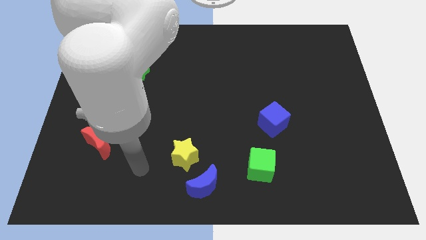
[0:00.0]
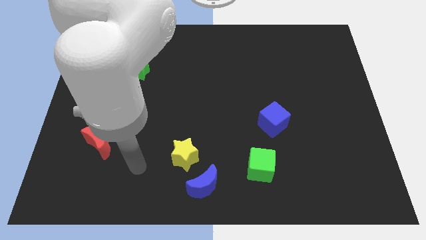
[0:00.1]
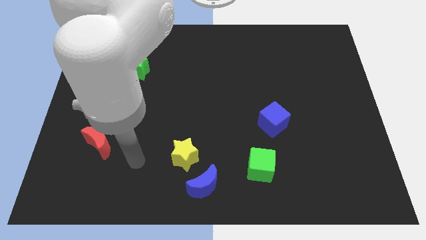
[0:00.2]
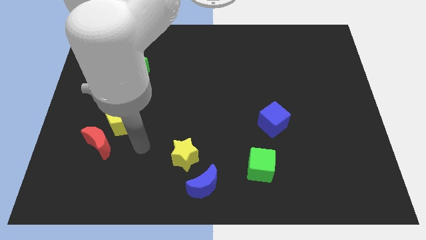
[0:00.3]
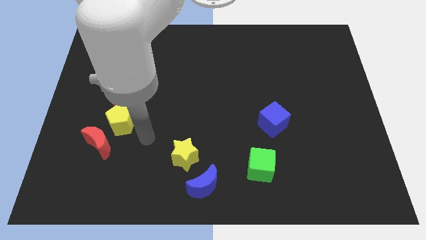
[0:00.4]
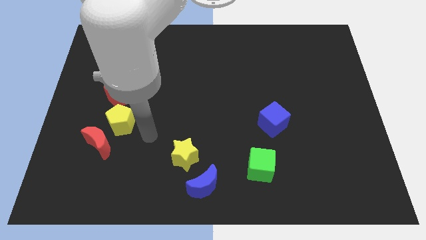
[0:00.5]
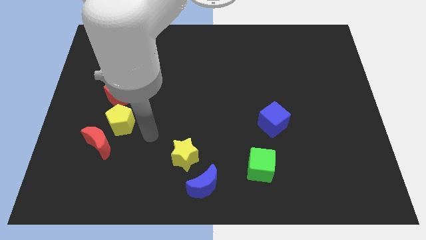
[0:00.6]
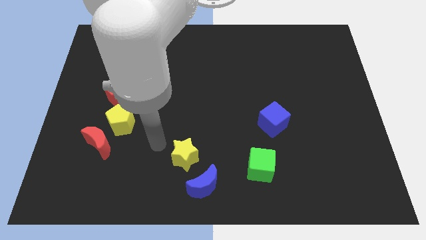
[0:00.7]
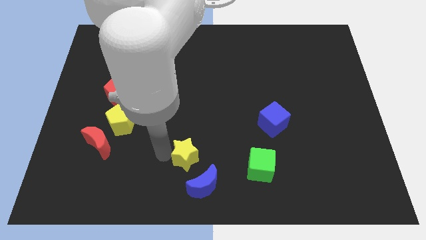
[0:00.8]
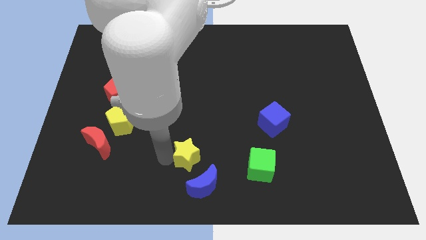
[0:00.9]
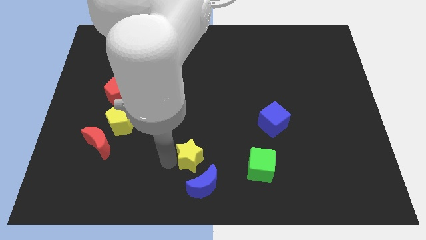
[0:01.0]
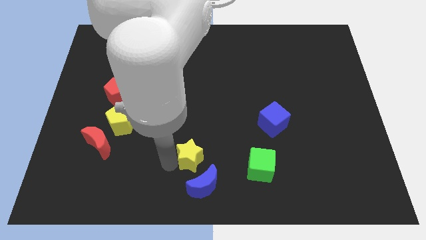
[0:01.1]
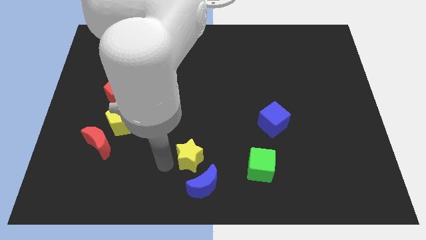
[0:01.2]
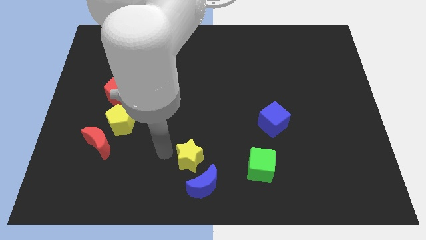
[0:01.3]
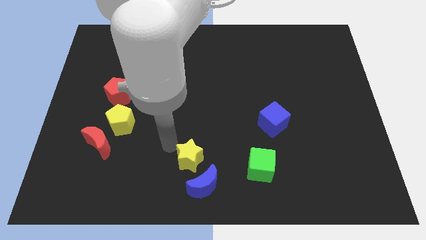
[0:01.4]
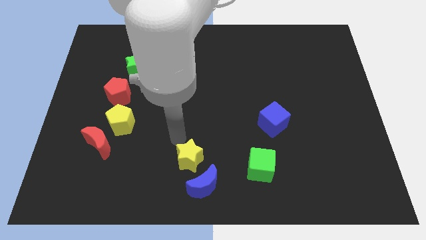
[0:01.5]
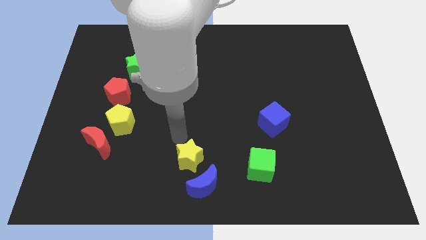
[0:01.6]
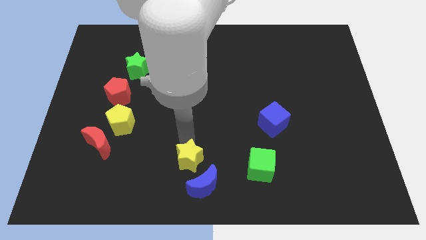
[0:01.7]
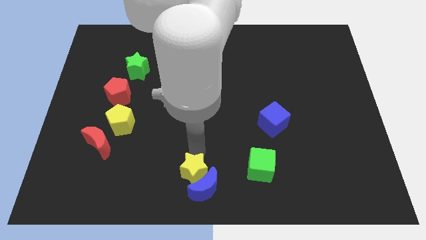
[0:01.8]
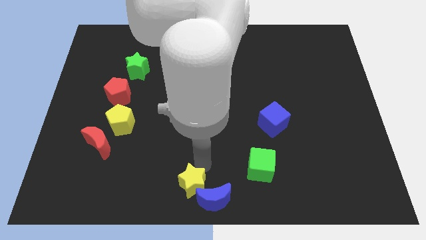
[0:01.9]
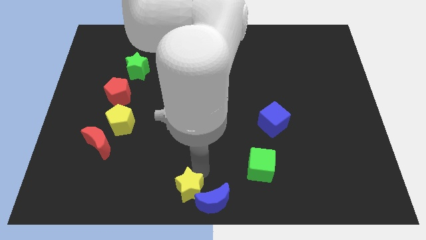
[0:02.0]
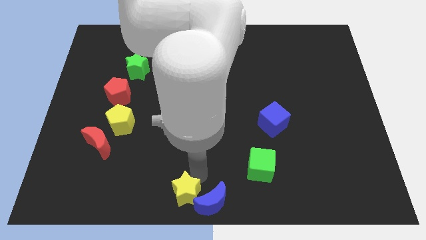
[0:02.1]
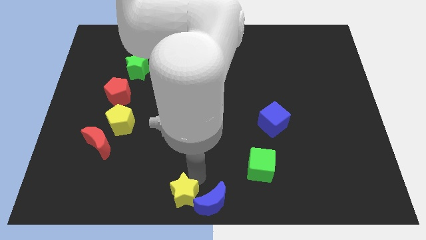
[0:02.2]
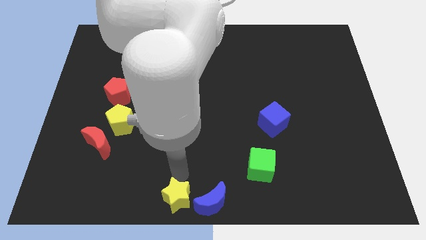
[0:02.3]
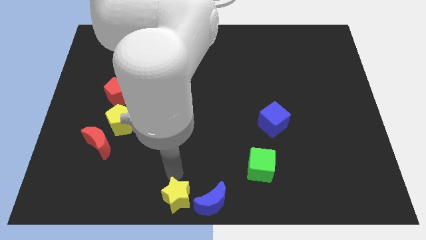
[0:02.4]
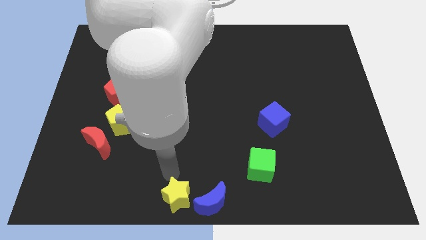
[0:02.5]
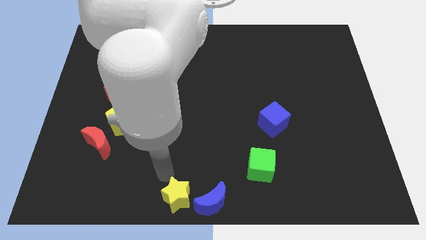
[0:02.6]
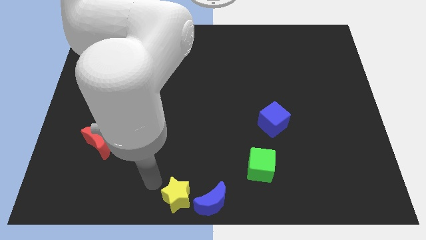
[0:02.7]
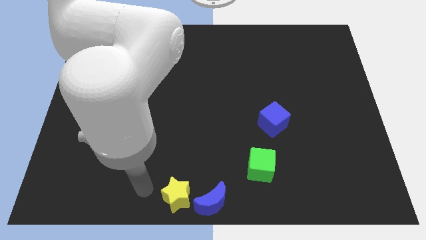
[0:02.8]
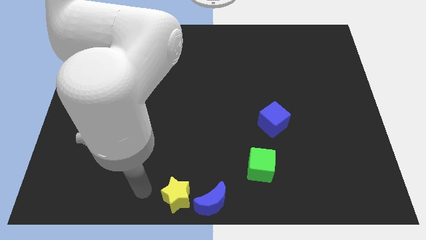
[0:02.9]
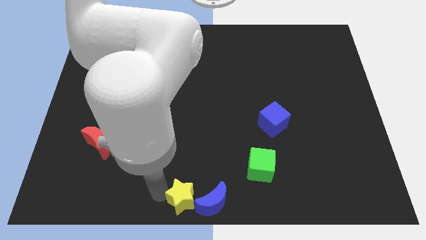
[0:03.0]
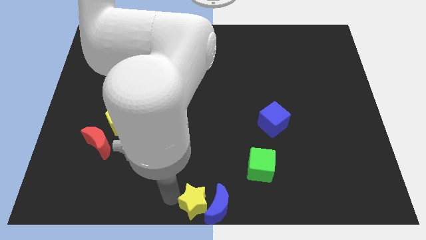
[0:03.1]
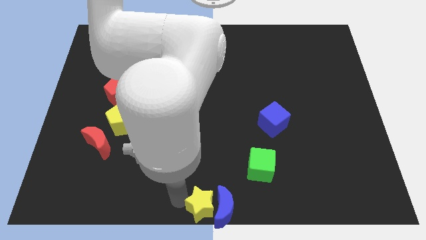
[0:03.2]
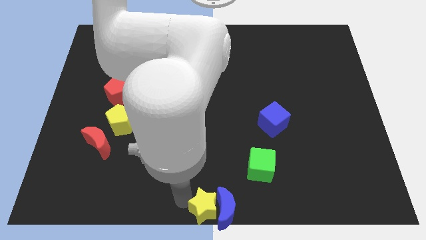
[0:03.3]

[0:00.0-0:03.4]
place the yellow star ansd the blue crescent at the bottom center of the board

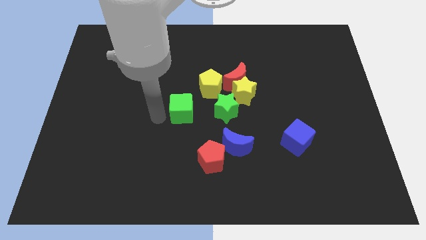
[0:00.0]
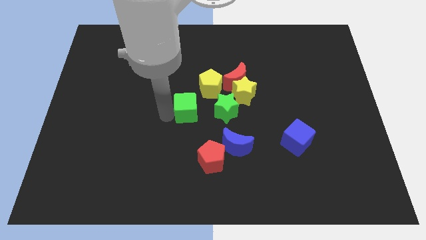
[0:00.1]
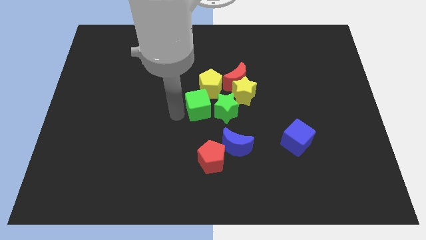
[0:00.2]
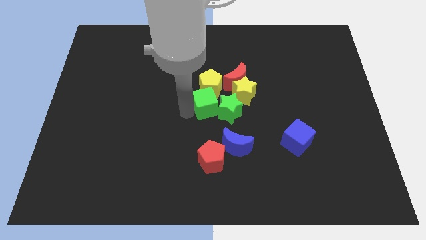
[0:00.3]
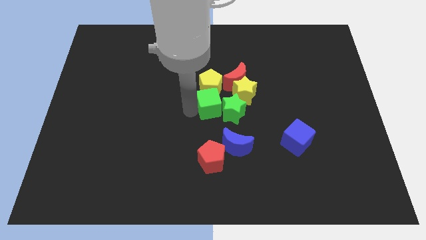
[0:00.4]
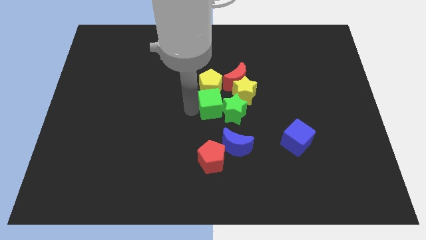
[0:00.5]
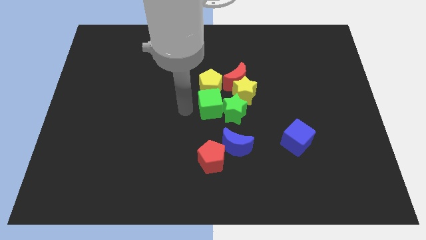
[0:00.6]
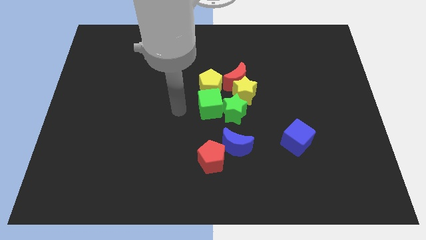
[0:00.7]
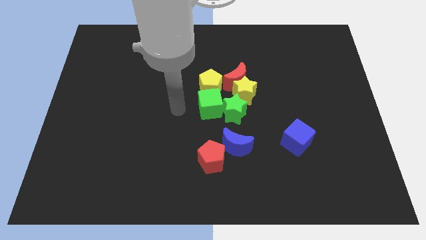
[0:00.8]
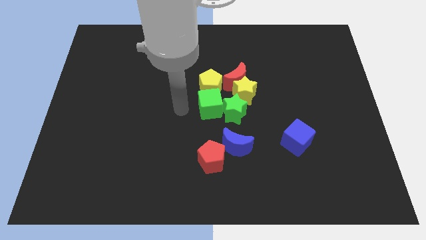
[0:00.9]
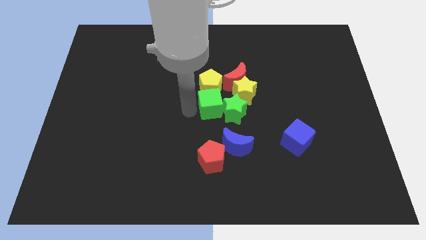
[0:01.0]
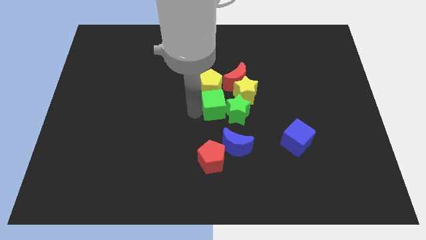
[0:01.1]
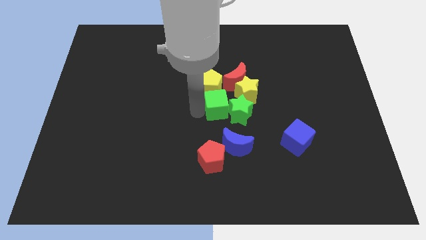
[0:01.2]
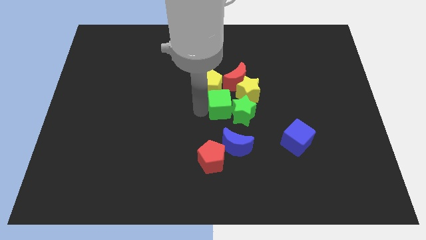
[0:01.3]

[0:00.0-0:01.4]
push the green cube into the green star from the left

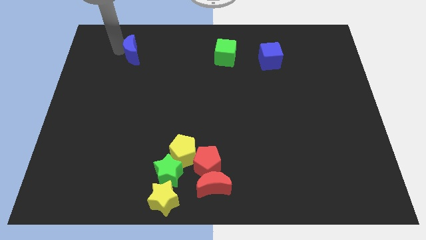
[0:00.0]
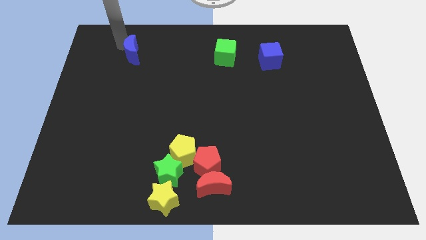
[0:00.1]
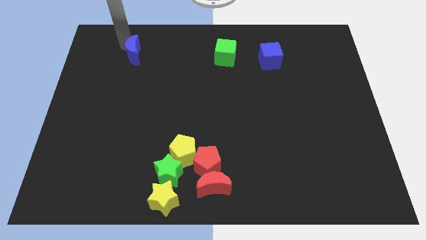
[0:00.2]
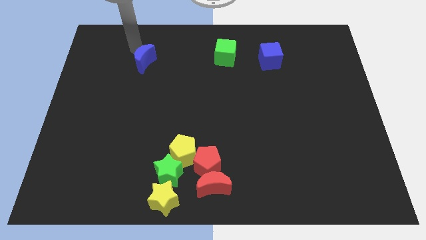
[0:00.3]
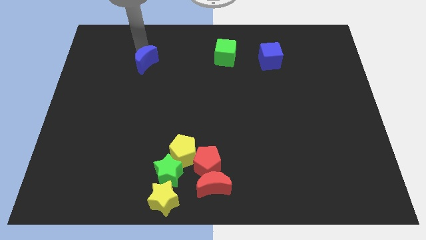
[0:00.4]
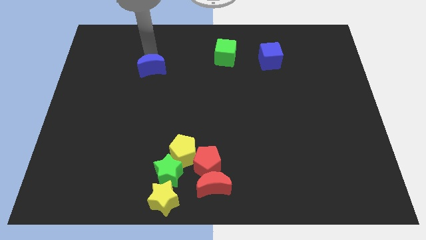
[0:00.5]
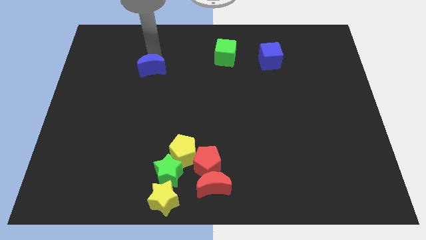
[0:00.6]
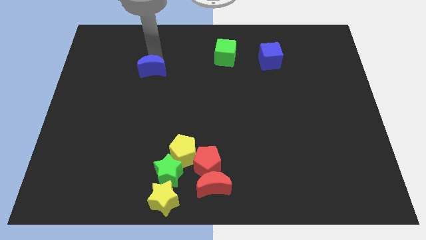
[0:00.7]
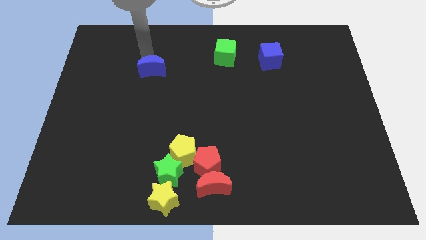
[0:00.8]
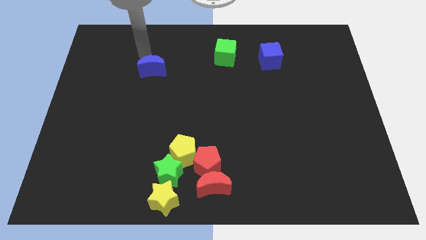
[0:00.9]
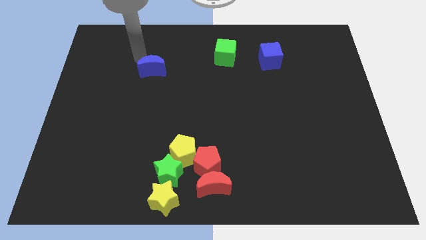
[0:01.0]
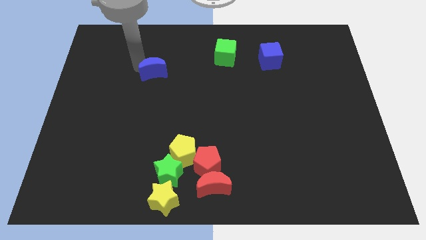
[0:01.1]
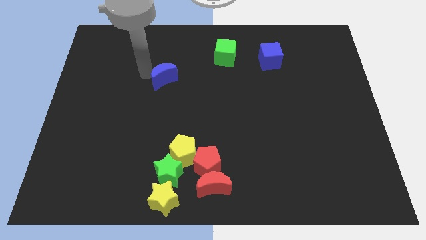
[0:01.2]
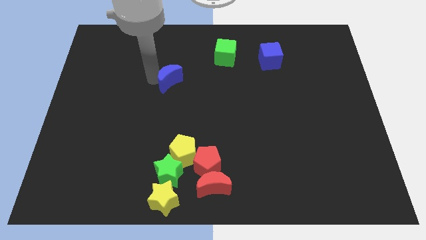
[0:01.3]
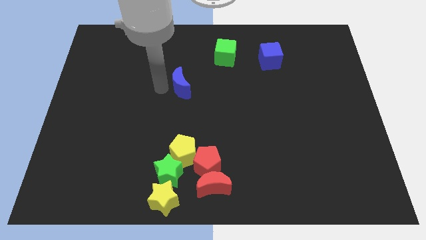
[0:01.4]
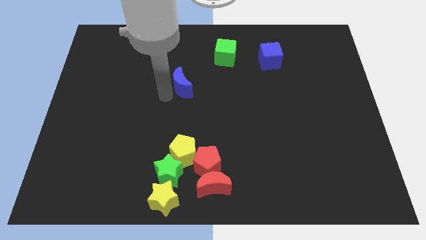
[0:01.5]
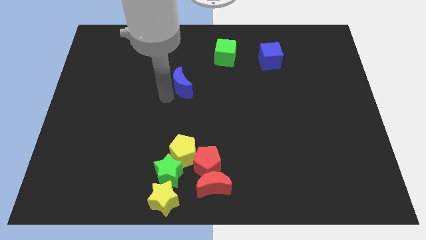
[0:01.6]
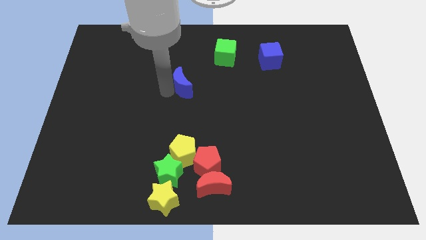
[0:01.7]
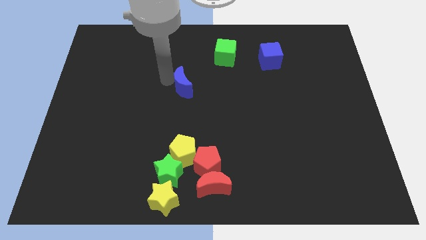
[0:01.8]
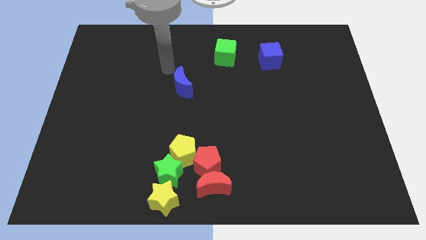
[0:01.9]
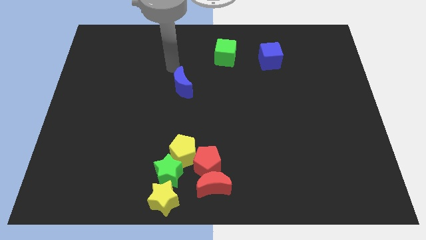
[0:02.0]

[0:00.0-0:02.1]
slightly move the blue crescent towards bottom

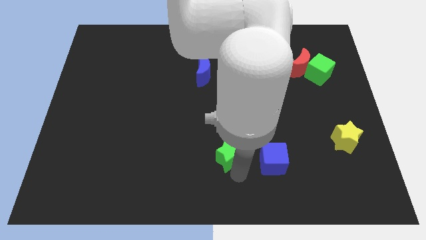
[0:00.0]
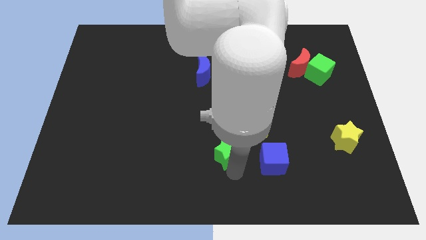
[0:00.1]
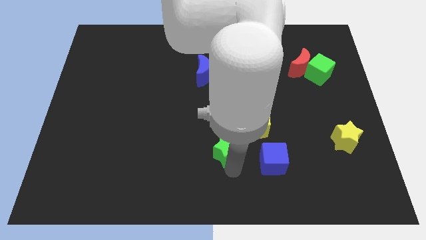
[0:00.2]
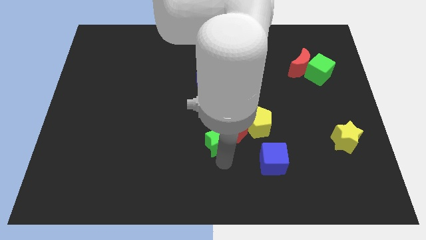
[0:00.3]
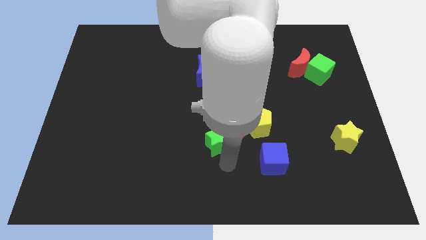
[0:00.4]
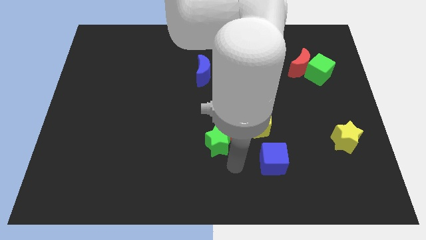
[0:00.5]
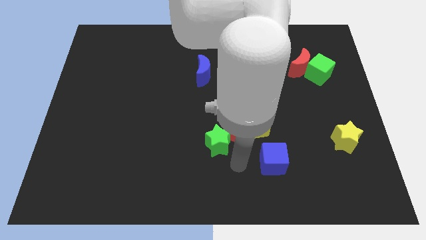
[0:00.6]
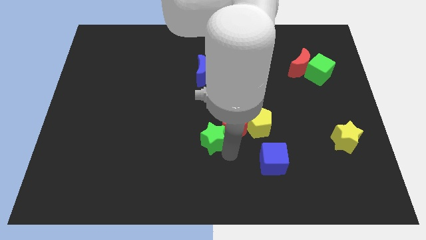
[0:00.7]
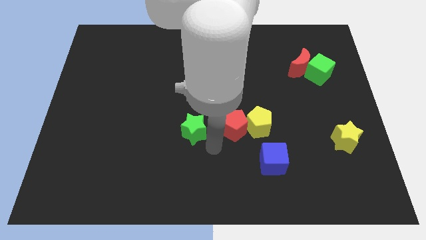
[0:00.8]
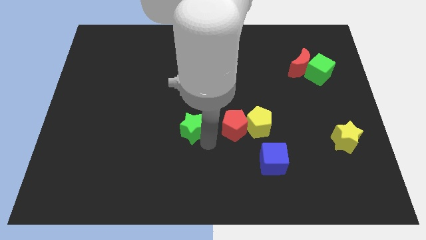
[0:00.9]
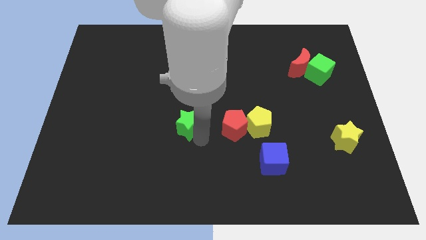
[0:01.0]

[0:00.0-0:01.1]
move the green star to left side of the red pentagon

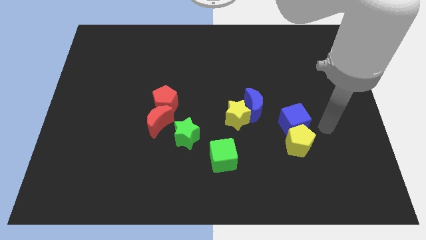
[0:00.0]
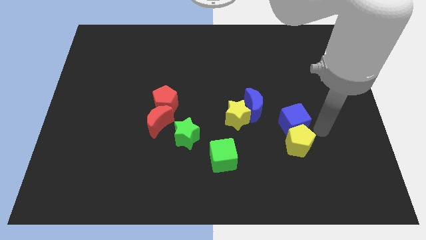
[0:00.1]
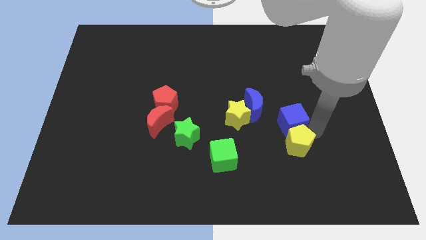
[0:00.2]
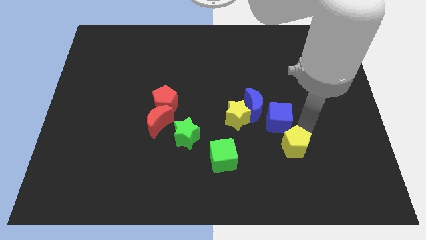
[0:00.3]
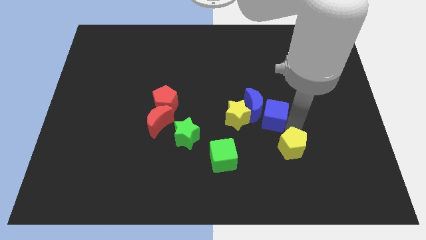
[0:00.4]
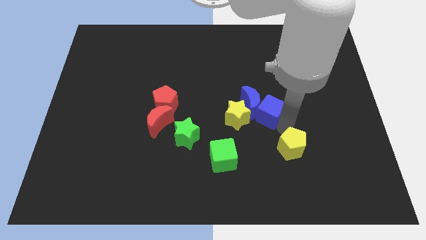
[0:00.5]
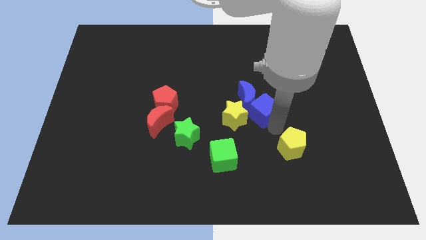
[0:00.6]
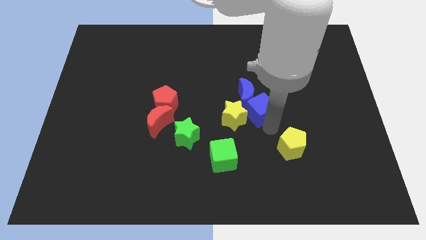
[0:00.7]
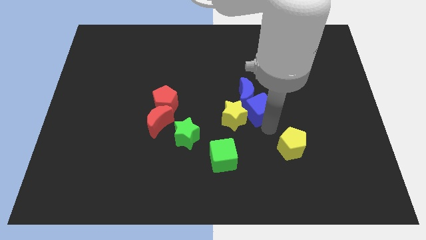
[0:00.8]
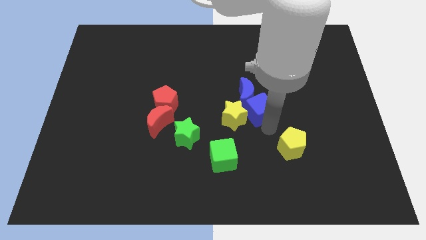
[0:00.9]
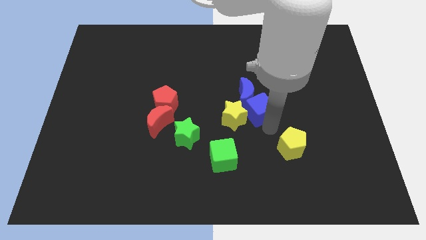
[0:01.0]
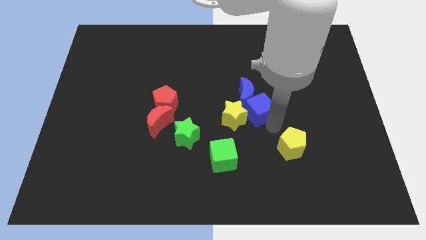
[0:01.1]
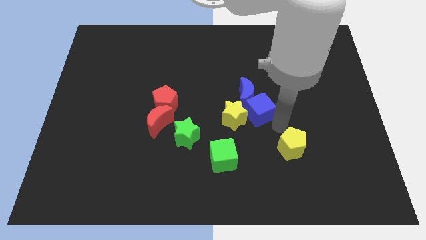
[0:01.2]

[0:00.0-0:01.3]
push the blue cube into the blue moon
